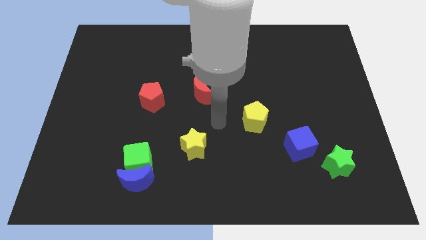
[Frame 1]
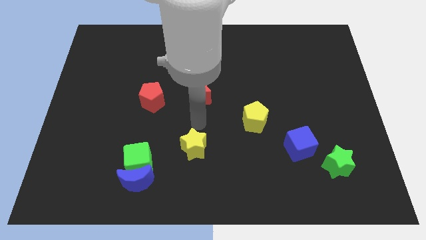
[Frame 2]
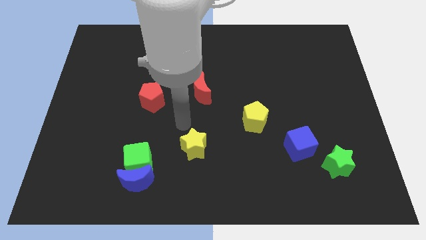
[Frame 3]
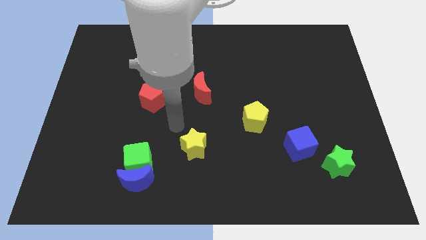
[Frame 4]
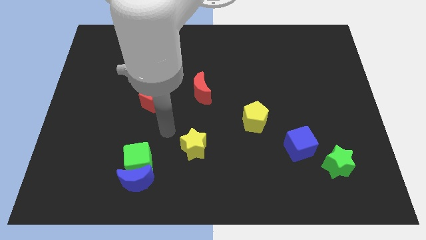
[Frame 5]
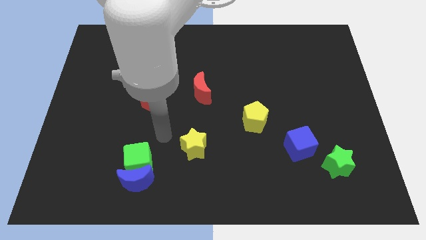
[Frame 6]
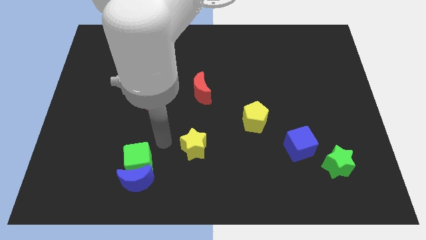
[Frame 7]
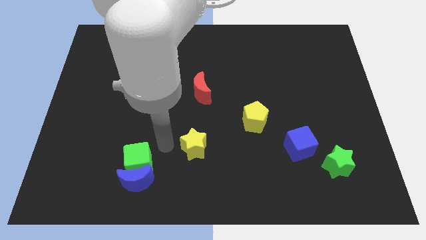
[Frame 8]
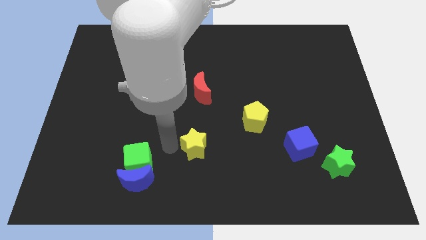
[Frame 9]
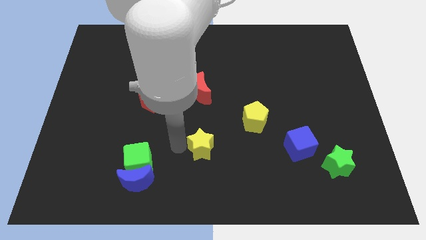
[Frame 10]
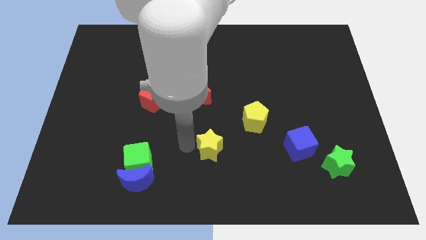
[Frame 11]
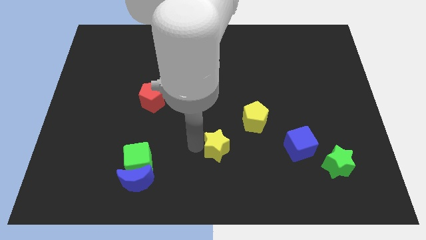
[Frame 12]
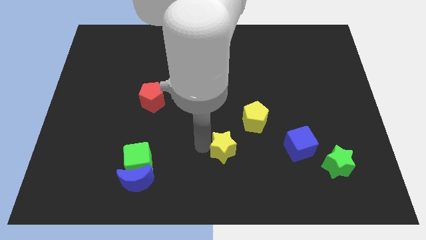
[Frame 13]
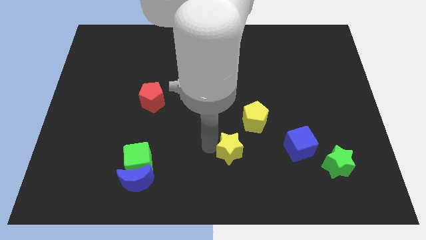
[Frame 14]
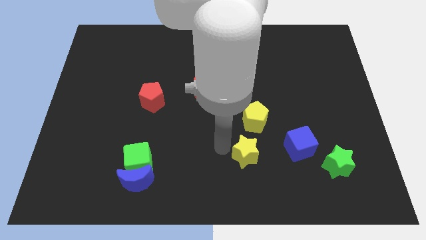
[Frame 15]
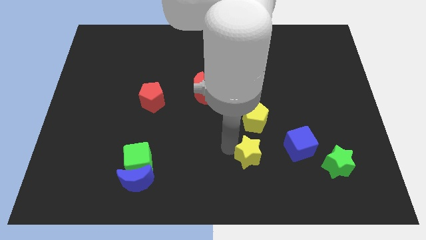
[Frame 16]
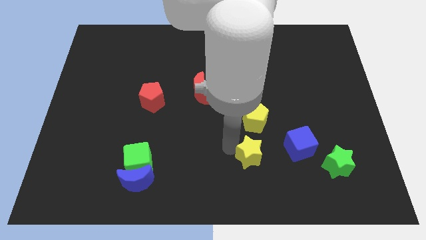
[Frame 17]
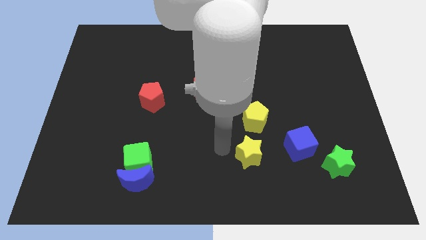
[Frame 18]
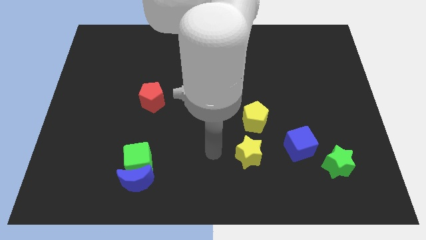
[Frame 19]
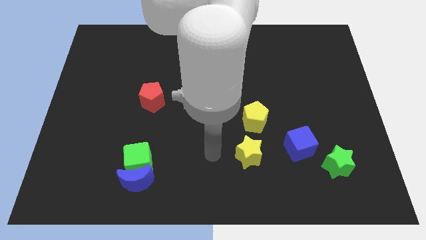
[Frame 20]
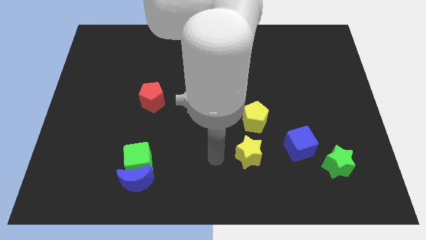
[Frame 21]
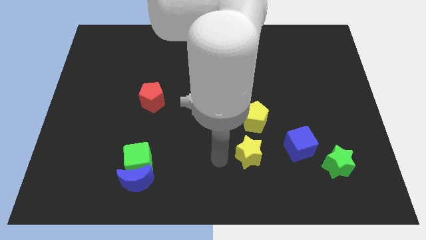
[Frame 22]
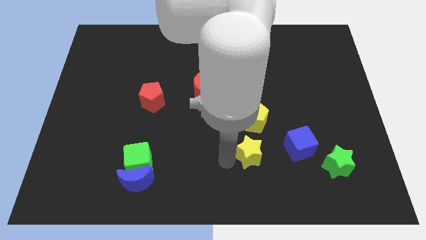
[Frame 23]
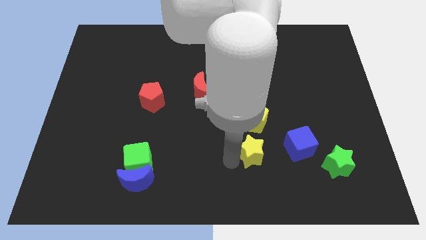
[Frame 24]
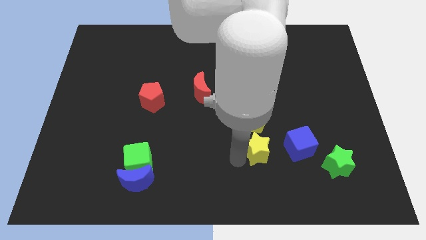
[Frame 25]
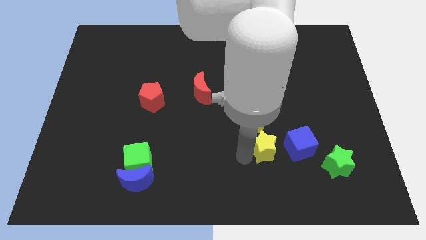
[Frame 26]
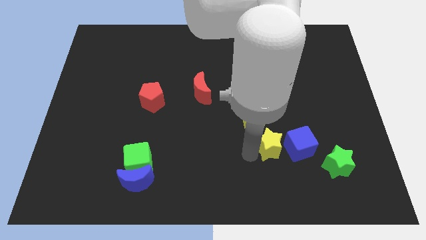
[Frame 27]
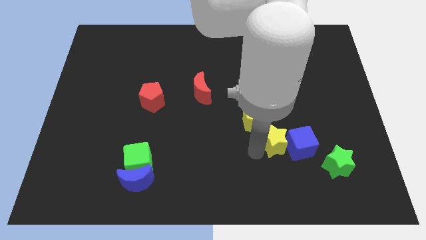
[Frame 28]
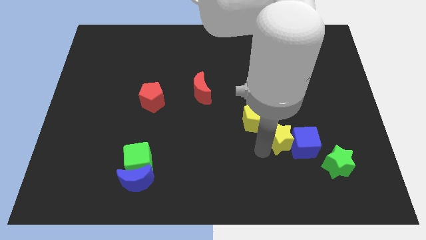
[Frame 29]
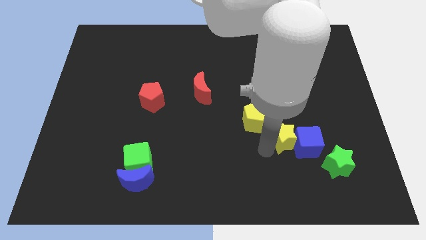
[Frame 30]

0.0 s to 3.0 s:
put the yellow star towards the blue cube

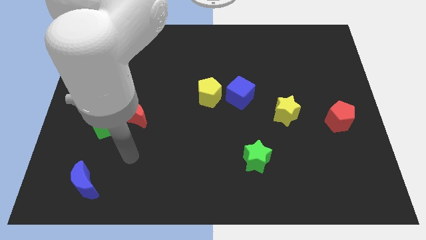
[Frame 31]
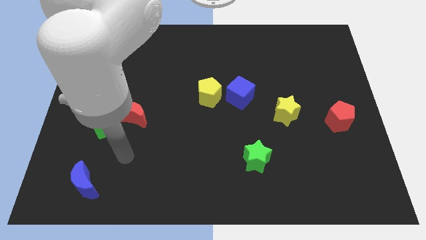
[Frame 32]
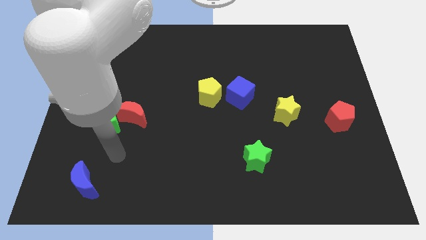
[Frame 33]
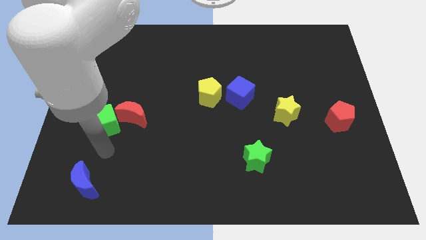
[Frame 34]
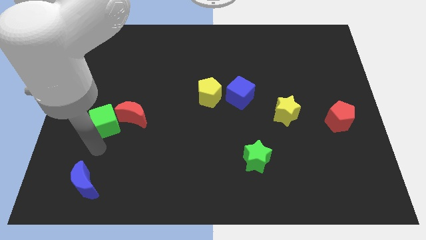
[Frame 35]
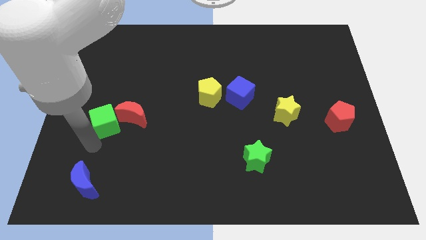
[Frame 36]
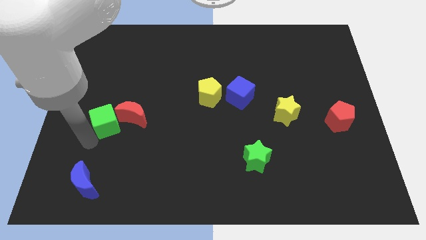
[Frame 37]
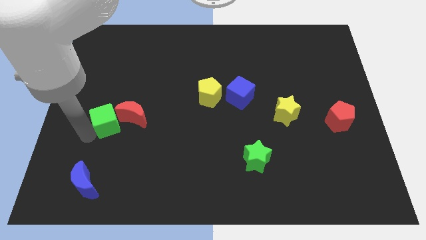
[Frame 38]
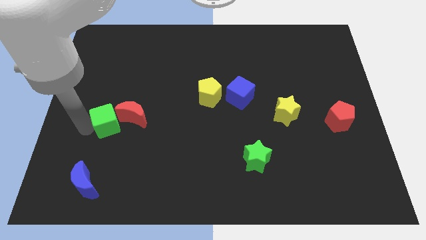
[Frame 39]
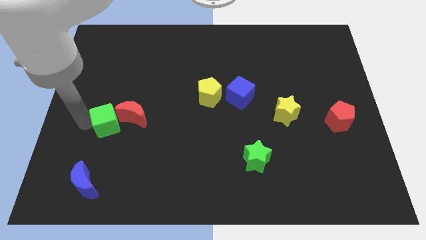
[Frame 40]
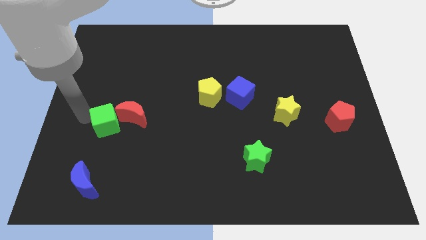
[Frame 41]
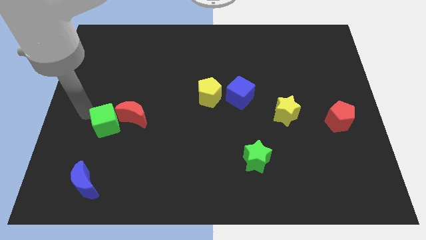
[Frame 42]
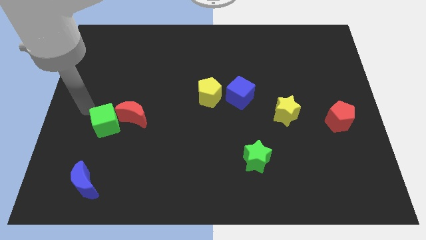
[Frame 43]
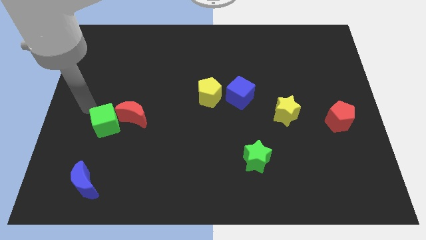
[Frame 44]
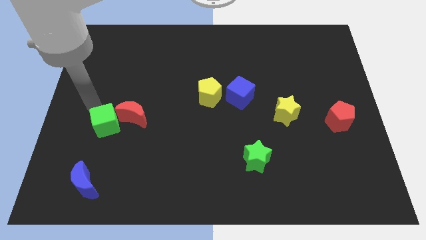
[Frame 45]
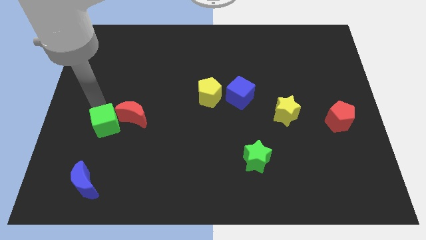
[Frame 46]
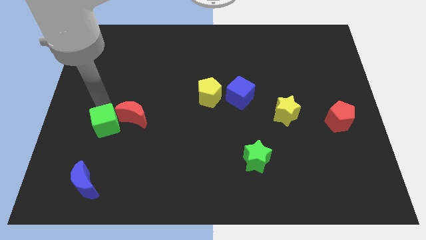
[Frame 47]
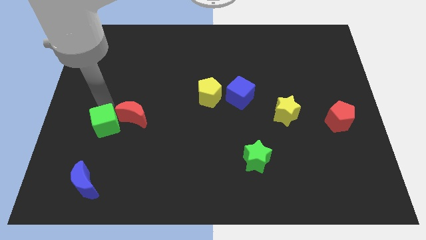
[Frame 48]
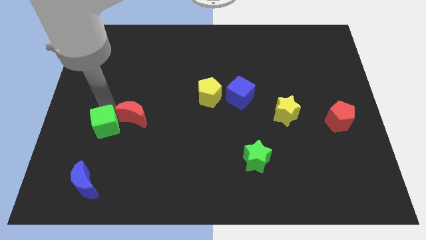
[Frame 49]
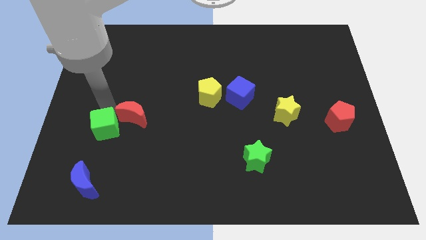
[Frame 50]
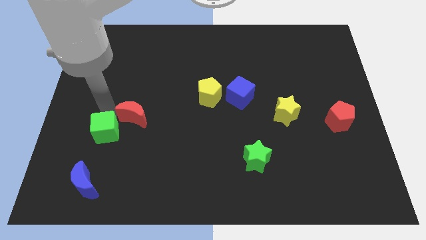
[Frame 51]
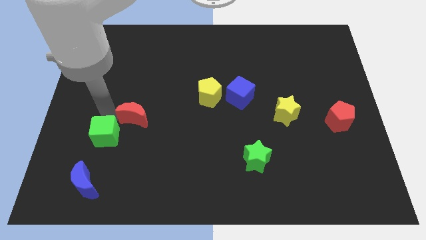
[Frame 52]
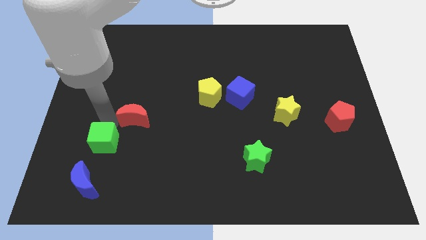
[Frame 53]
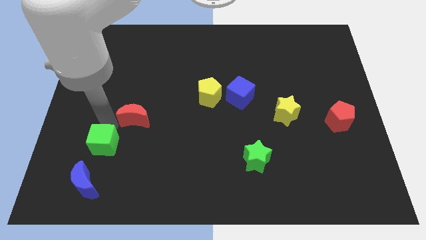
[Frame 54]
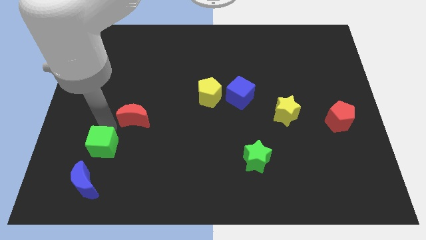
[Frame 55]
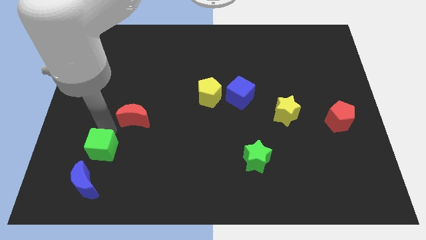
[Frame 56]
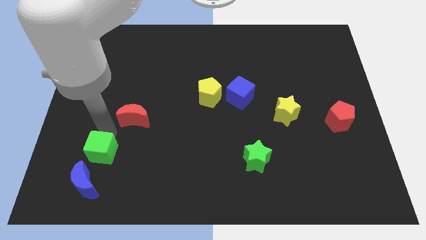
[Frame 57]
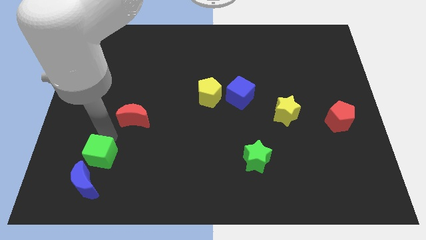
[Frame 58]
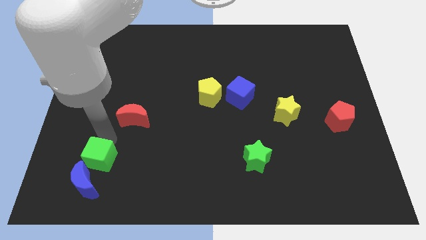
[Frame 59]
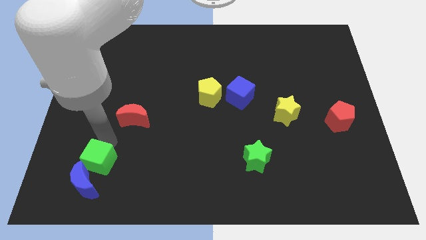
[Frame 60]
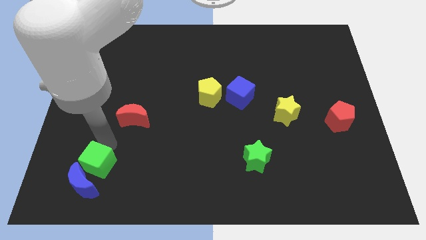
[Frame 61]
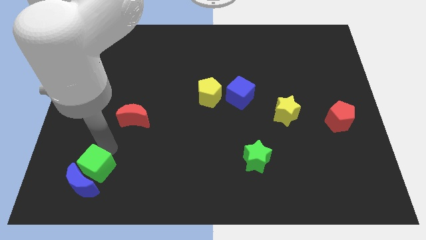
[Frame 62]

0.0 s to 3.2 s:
put the green cube to the blue moon

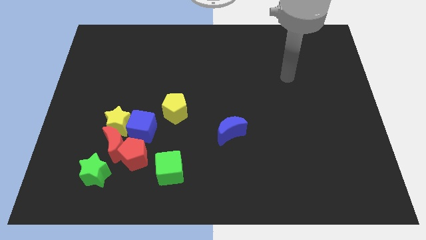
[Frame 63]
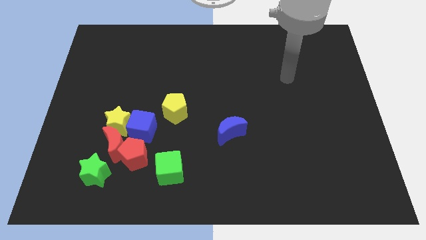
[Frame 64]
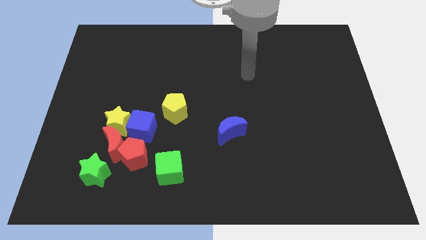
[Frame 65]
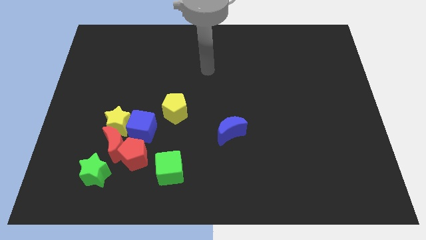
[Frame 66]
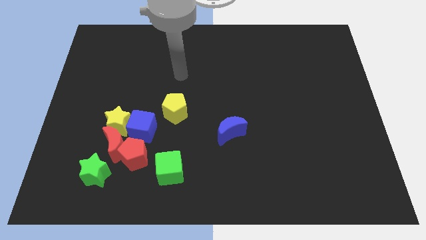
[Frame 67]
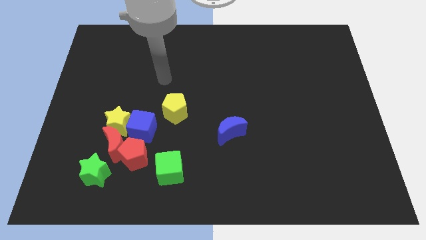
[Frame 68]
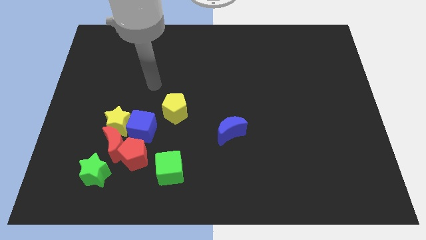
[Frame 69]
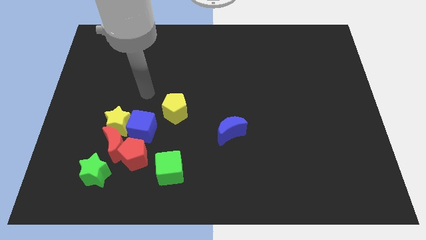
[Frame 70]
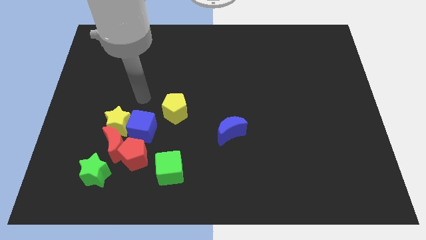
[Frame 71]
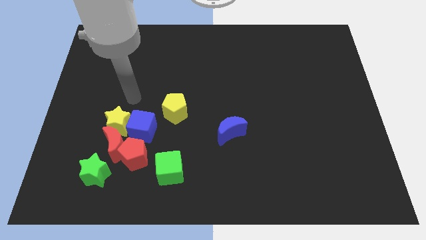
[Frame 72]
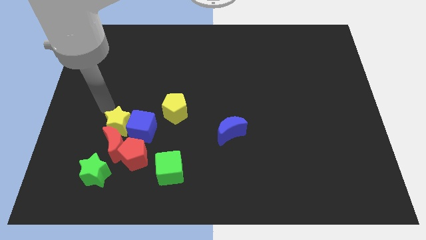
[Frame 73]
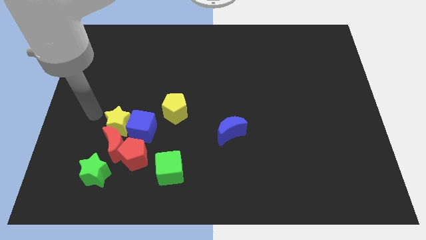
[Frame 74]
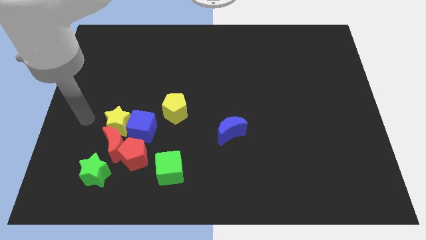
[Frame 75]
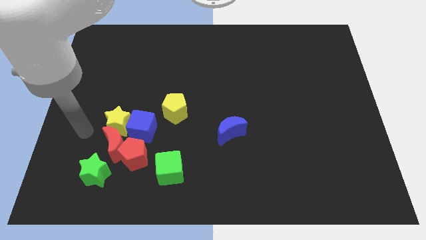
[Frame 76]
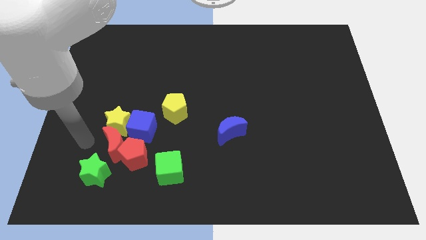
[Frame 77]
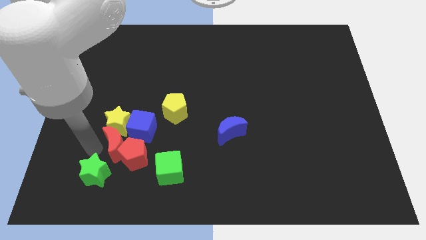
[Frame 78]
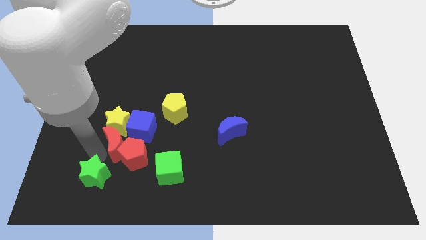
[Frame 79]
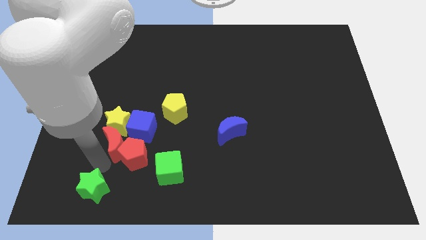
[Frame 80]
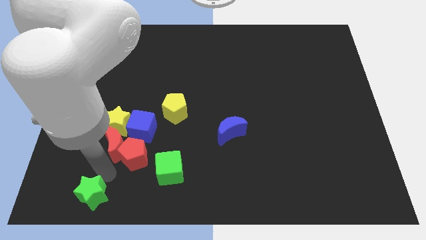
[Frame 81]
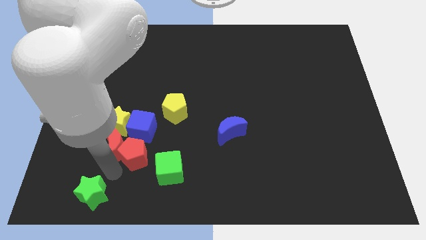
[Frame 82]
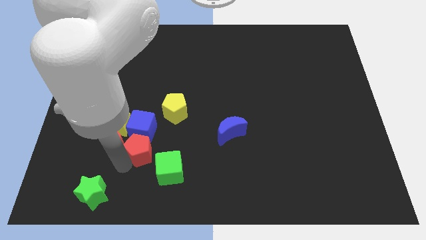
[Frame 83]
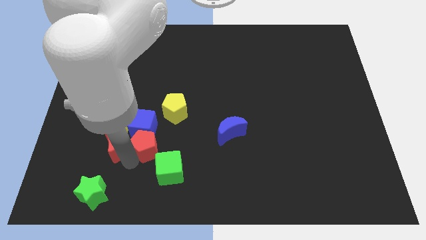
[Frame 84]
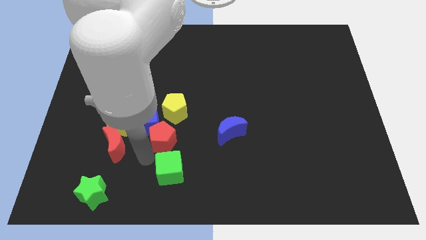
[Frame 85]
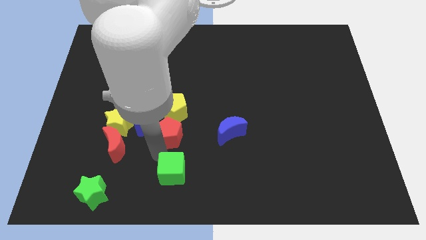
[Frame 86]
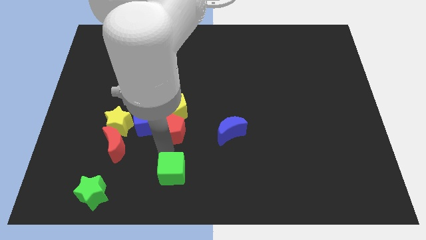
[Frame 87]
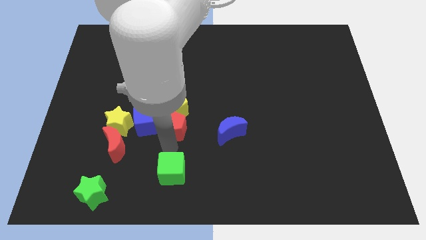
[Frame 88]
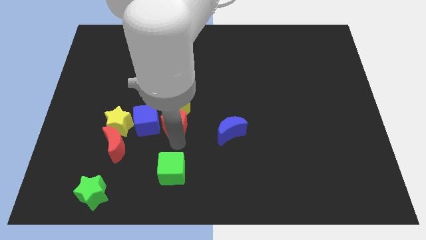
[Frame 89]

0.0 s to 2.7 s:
push the red pentagon next to the yellow pentagon
